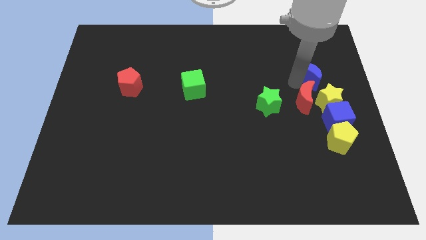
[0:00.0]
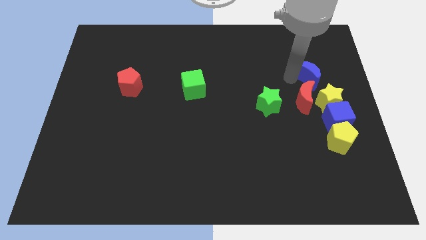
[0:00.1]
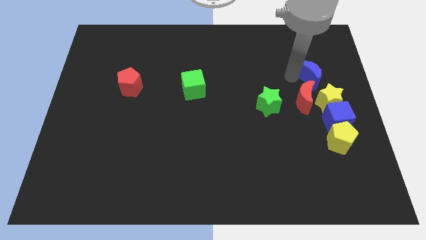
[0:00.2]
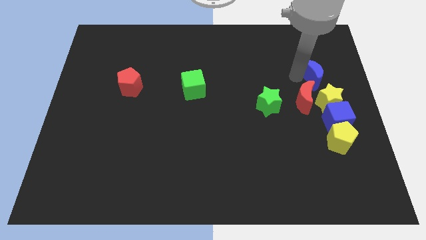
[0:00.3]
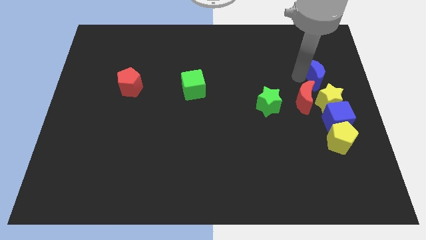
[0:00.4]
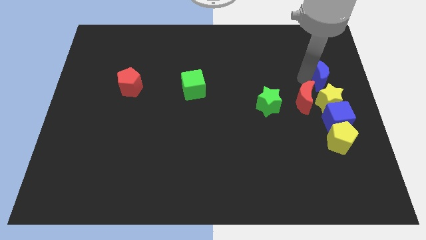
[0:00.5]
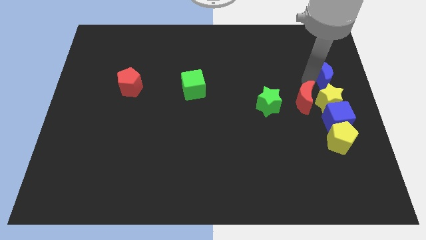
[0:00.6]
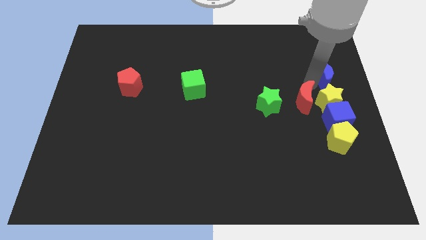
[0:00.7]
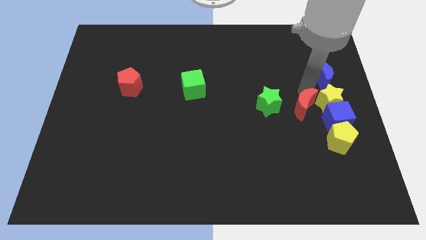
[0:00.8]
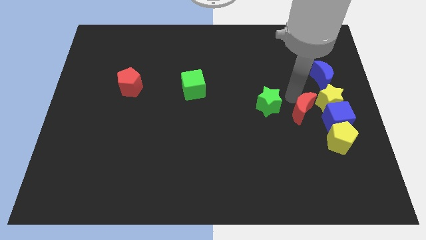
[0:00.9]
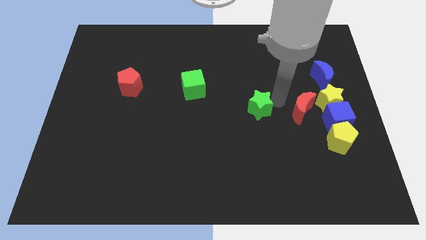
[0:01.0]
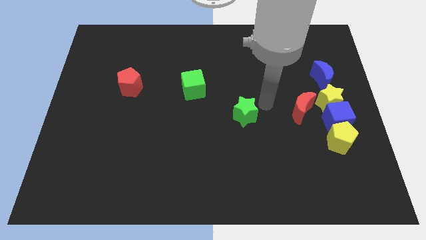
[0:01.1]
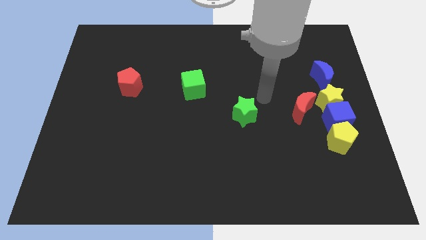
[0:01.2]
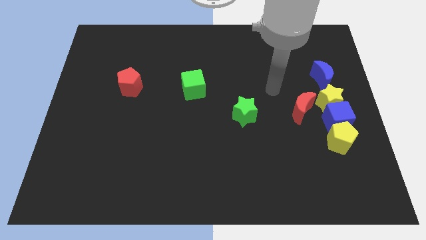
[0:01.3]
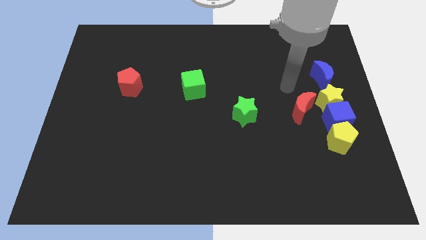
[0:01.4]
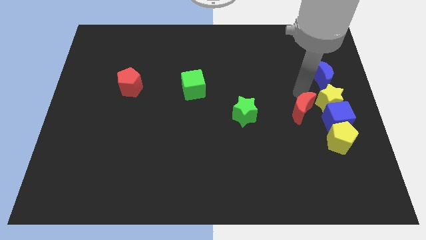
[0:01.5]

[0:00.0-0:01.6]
separate the blue moon from red moon

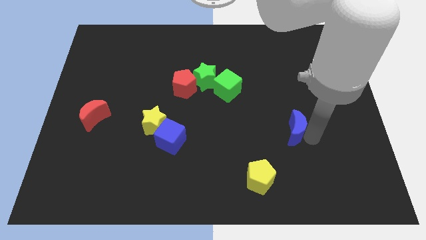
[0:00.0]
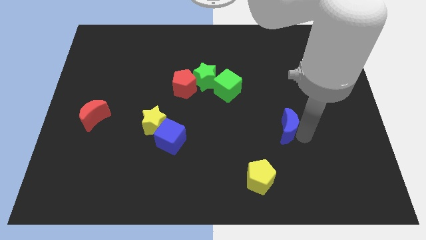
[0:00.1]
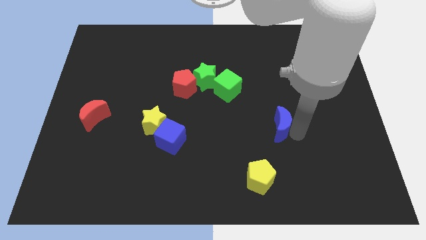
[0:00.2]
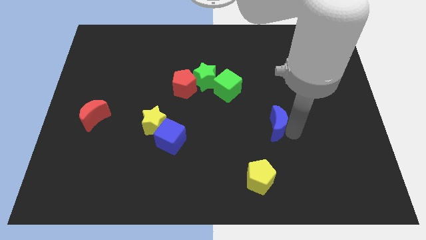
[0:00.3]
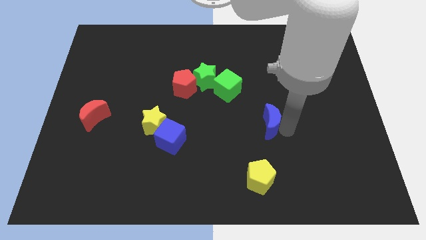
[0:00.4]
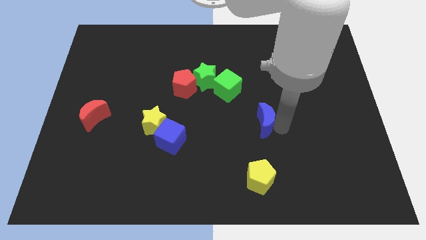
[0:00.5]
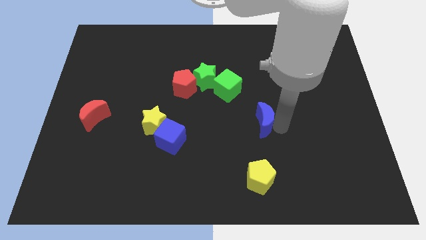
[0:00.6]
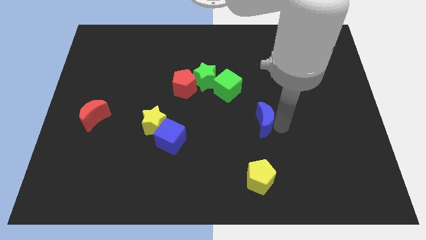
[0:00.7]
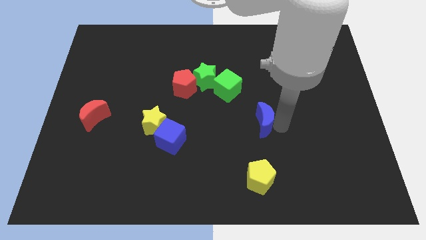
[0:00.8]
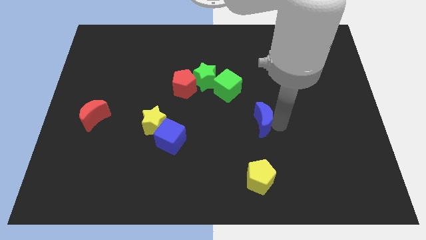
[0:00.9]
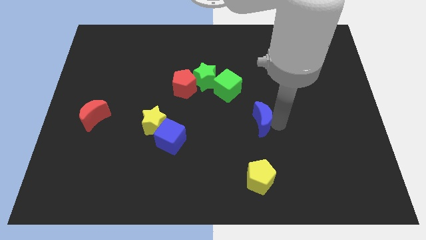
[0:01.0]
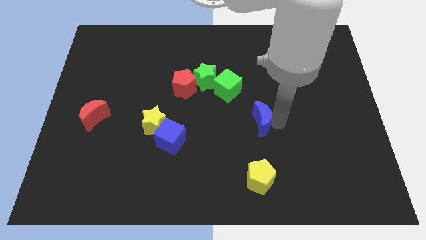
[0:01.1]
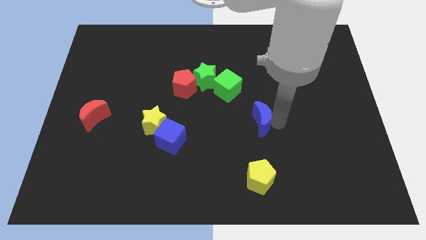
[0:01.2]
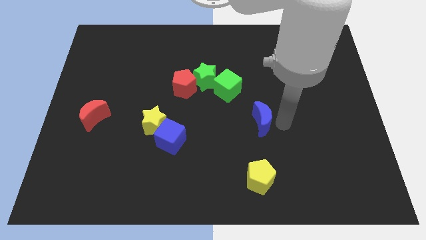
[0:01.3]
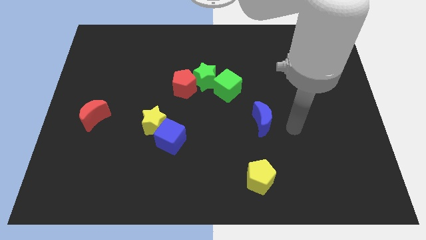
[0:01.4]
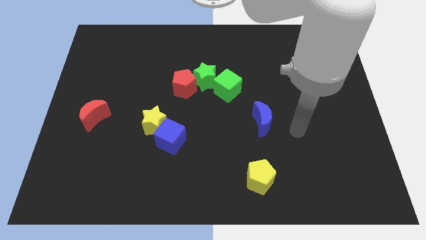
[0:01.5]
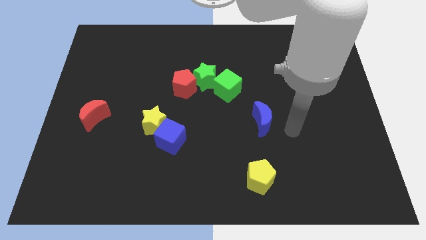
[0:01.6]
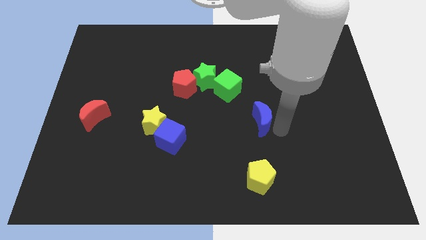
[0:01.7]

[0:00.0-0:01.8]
put the blue crescent diagonally on the bottom right of the green cube

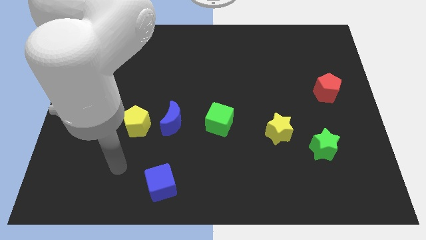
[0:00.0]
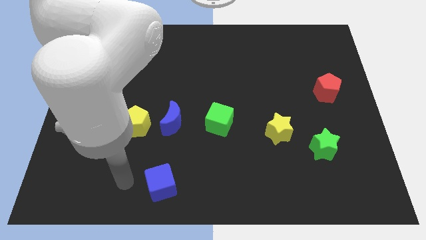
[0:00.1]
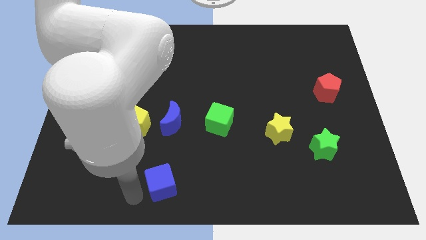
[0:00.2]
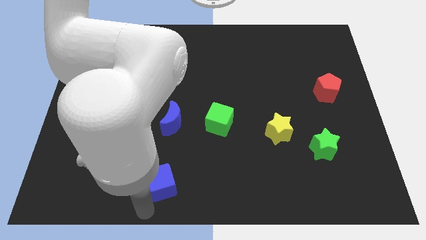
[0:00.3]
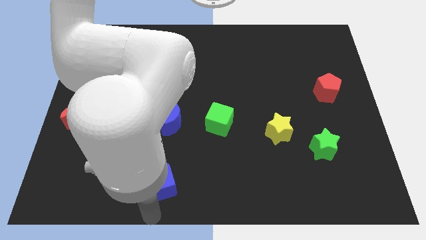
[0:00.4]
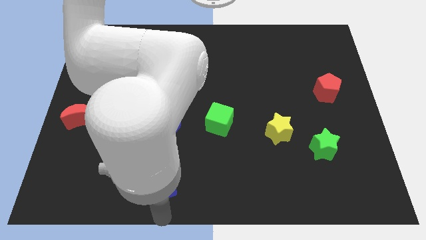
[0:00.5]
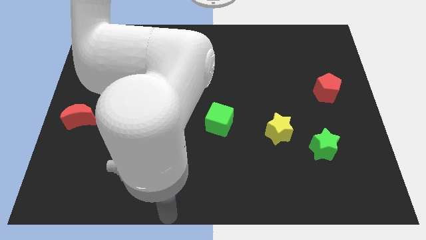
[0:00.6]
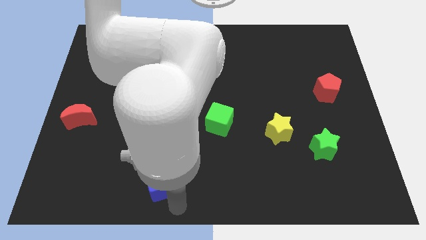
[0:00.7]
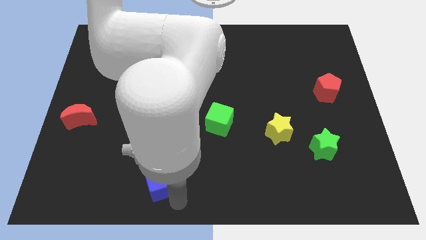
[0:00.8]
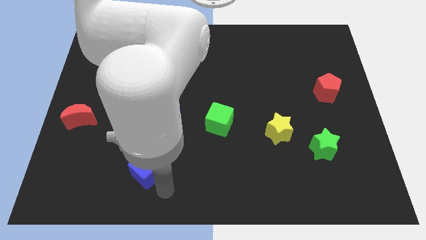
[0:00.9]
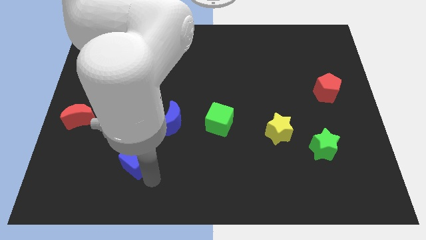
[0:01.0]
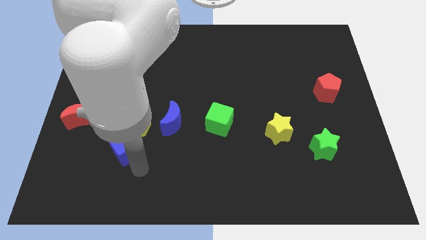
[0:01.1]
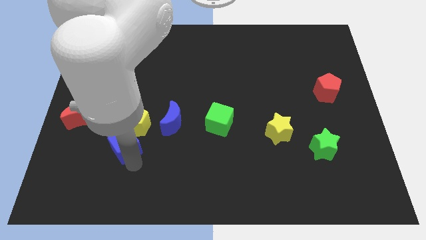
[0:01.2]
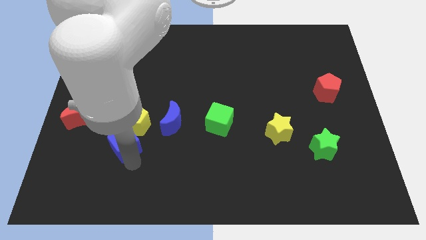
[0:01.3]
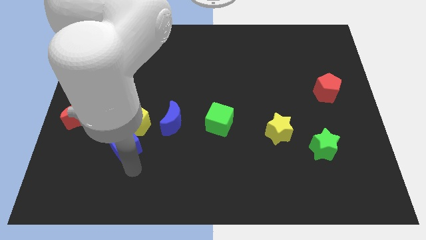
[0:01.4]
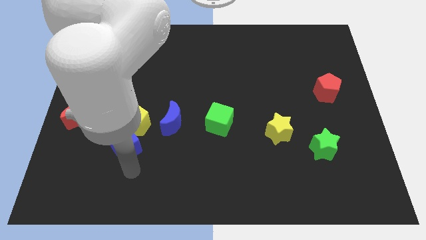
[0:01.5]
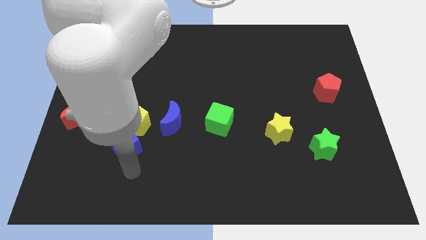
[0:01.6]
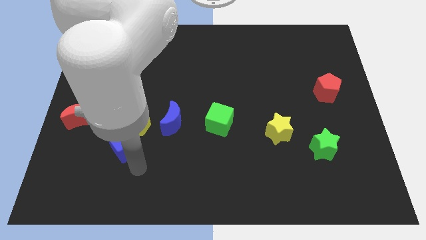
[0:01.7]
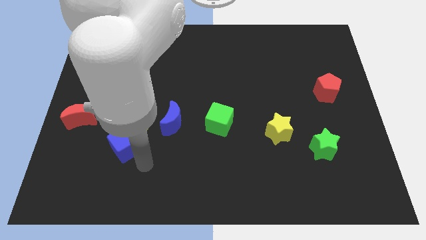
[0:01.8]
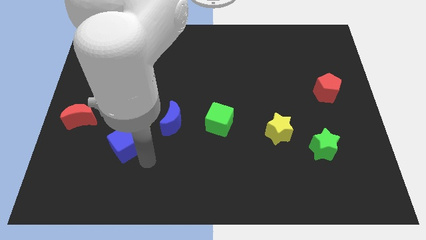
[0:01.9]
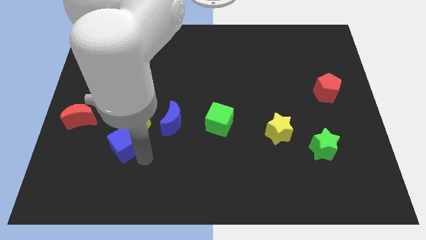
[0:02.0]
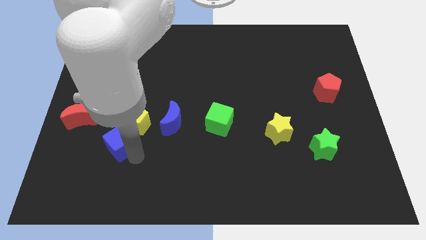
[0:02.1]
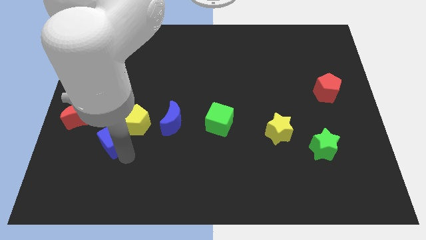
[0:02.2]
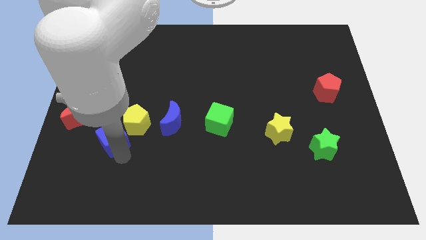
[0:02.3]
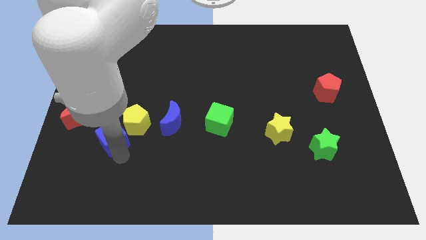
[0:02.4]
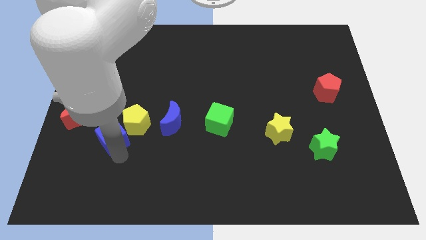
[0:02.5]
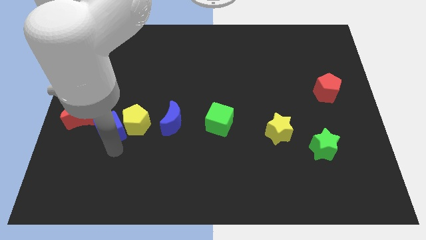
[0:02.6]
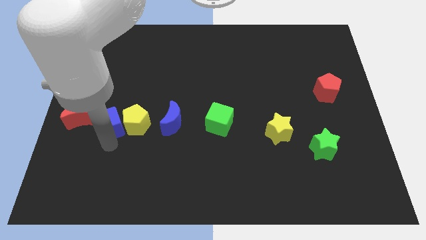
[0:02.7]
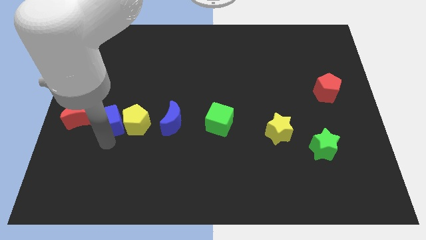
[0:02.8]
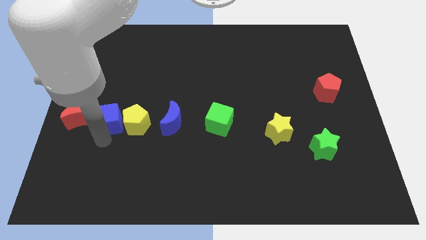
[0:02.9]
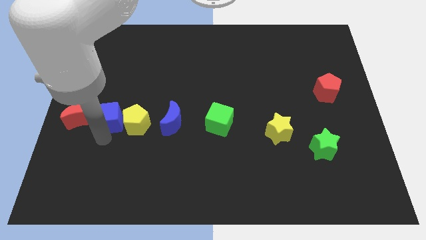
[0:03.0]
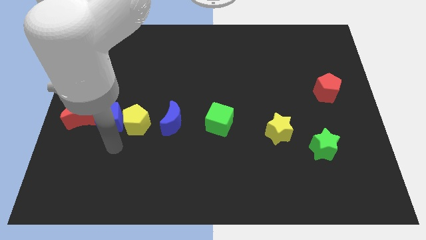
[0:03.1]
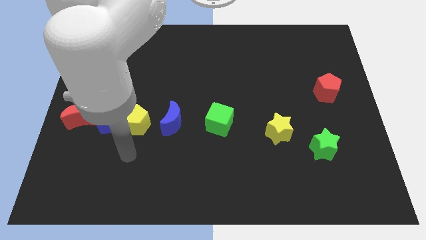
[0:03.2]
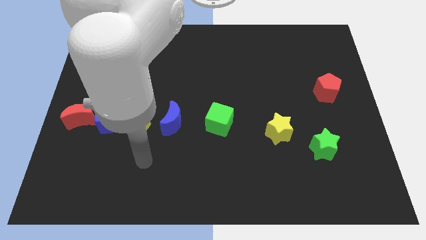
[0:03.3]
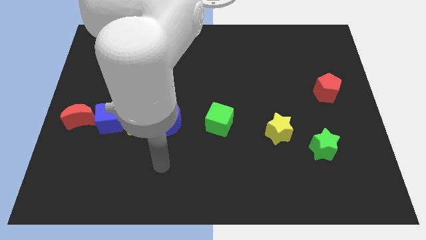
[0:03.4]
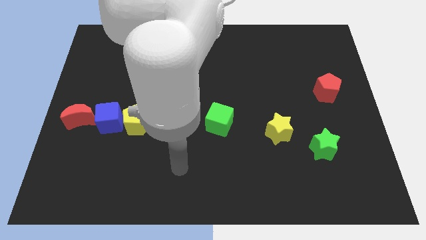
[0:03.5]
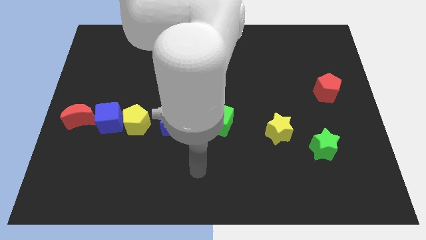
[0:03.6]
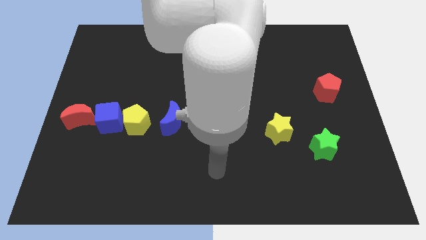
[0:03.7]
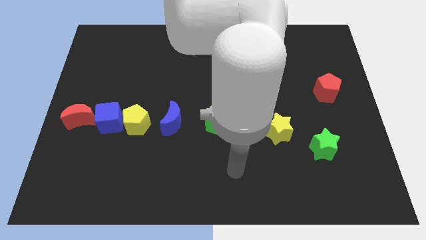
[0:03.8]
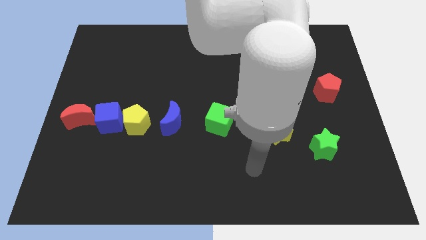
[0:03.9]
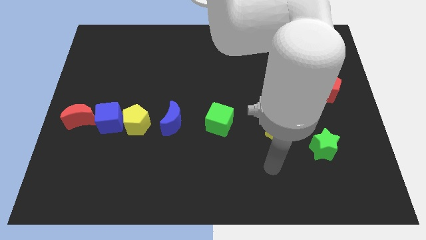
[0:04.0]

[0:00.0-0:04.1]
place blue cube in between red moon and yellow pentagon

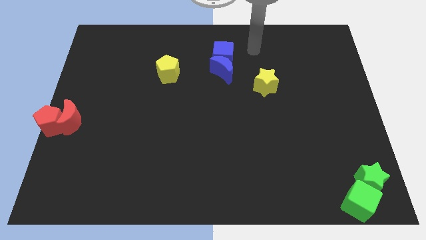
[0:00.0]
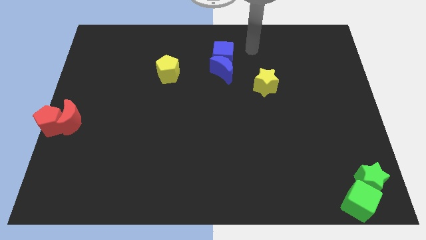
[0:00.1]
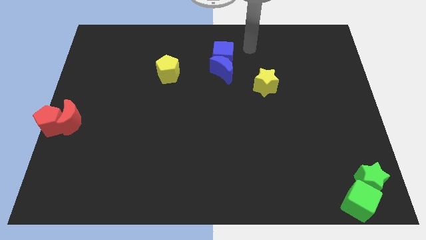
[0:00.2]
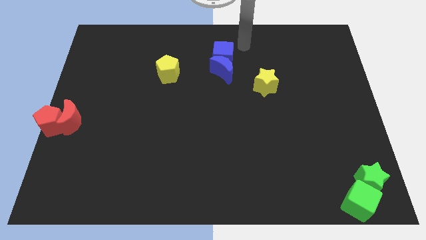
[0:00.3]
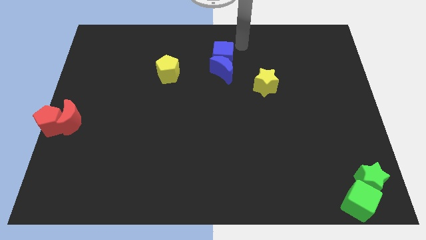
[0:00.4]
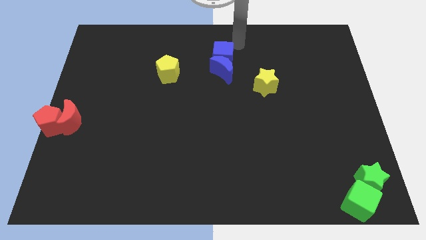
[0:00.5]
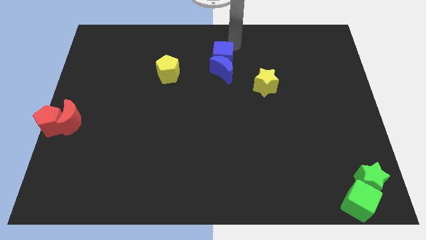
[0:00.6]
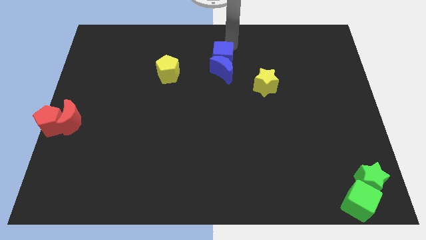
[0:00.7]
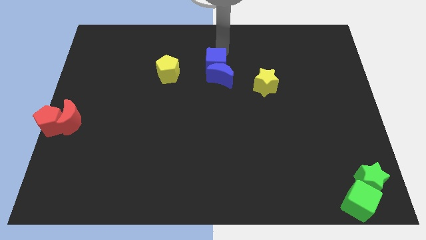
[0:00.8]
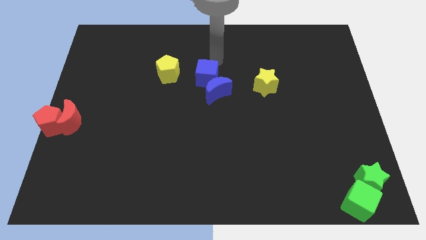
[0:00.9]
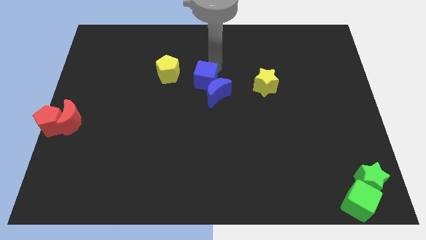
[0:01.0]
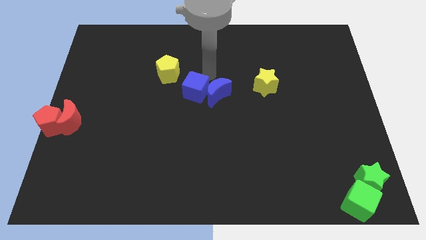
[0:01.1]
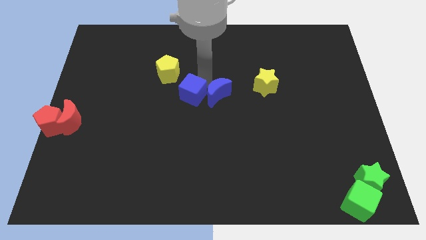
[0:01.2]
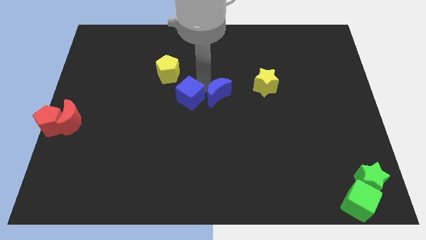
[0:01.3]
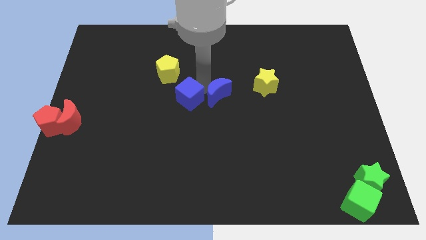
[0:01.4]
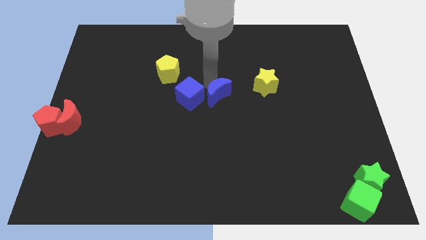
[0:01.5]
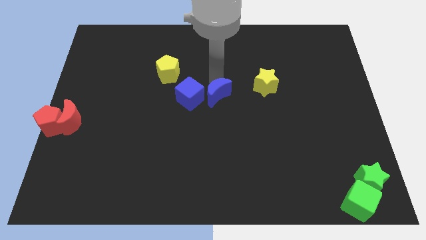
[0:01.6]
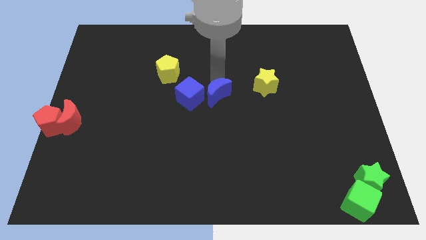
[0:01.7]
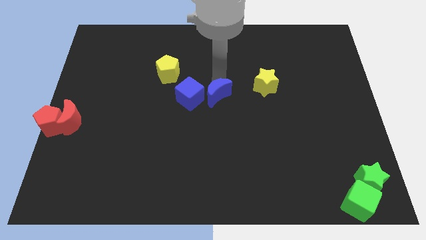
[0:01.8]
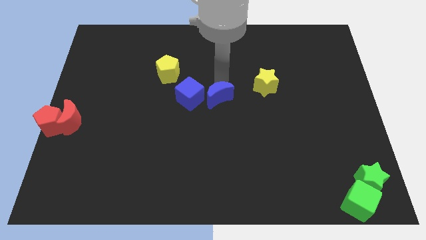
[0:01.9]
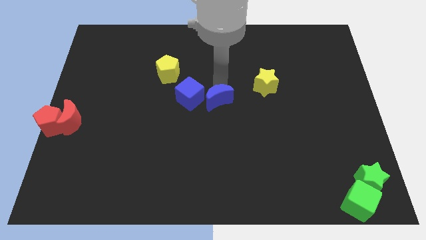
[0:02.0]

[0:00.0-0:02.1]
move the blue blocks towards the center of the board
